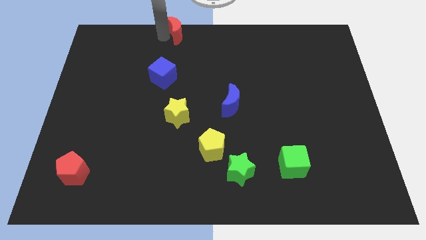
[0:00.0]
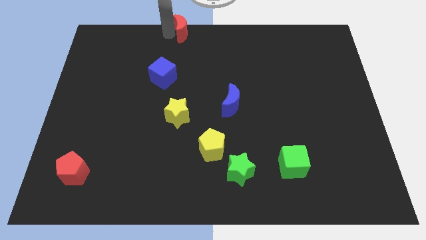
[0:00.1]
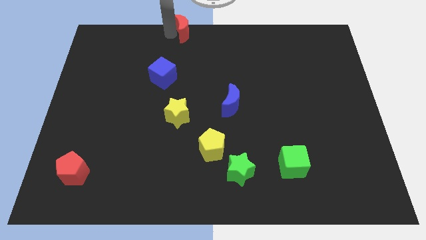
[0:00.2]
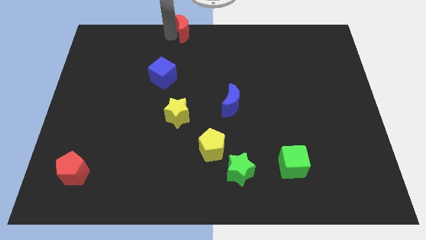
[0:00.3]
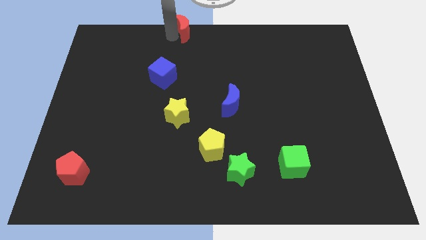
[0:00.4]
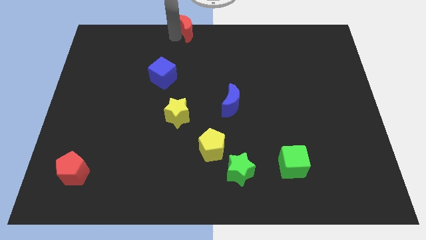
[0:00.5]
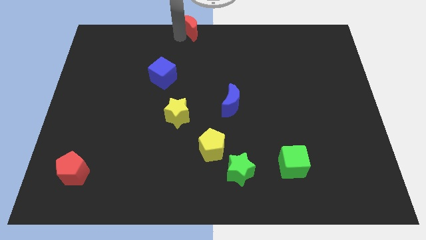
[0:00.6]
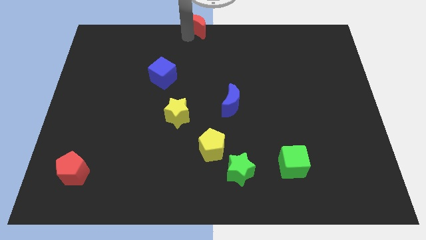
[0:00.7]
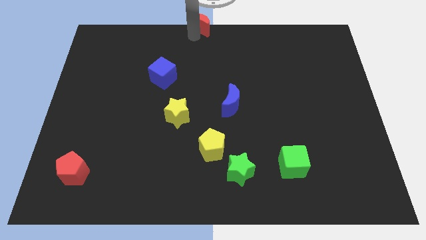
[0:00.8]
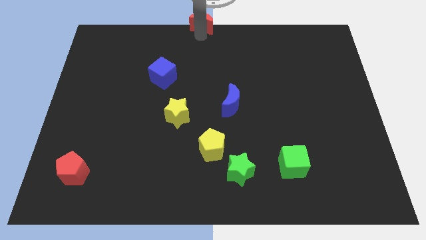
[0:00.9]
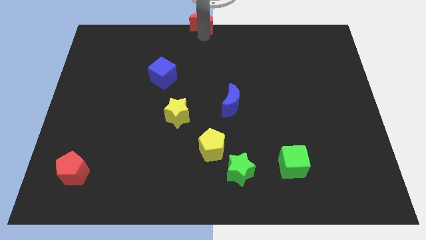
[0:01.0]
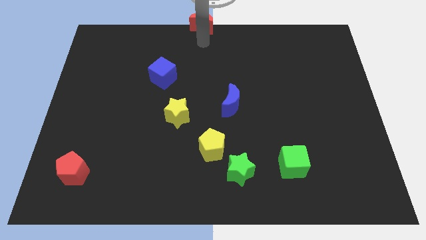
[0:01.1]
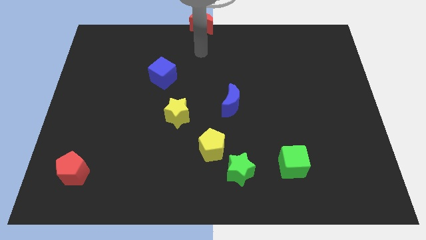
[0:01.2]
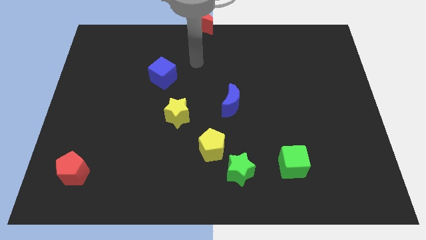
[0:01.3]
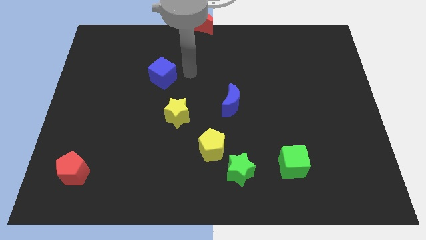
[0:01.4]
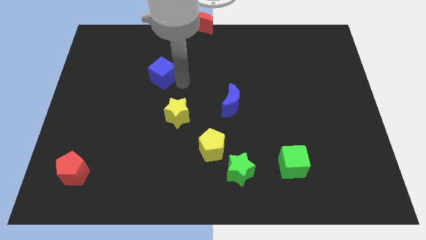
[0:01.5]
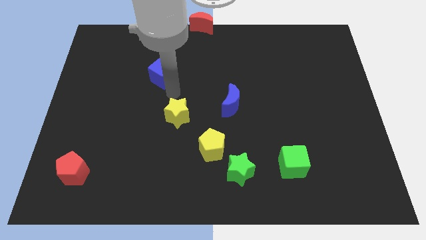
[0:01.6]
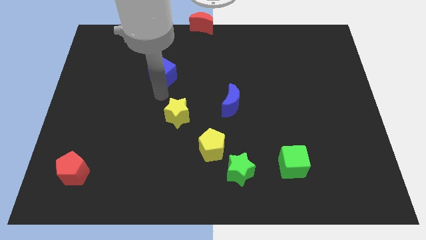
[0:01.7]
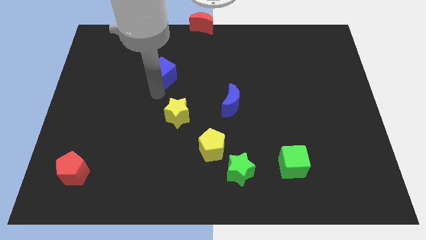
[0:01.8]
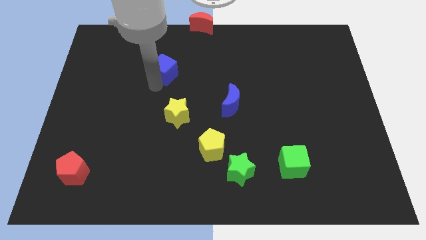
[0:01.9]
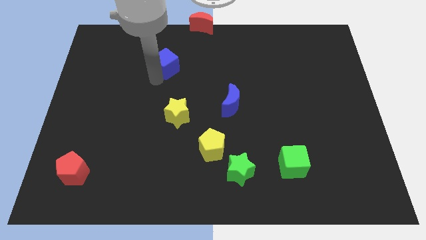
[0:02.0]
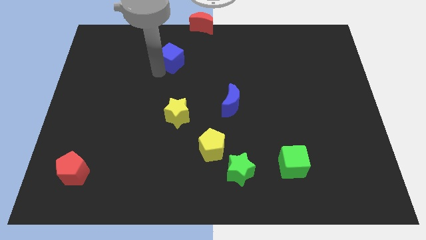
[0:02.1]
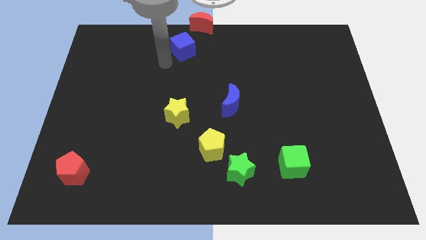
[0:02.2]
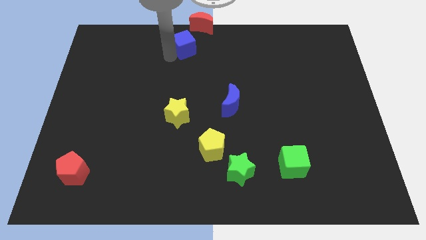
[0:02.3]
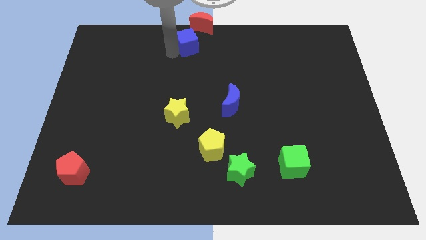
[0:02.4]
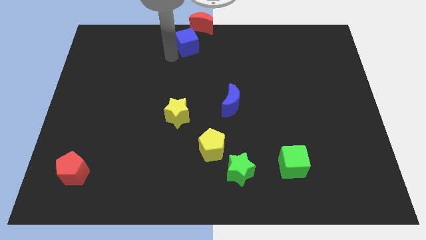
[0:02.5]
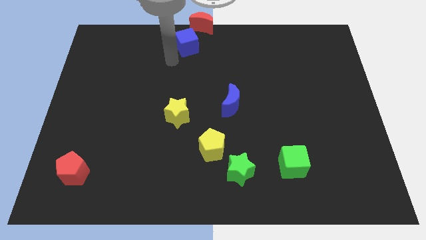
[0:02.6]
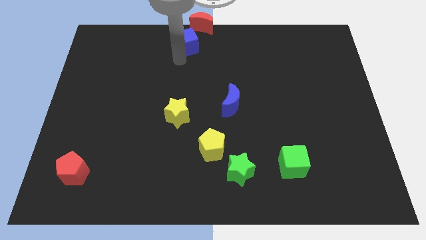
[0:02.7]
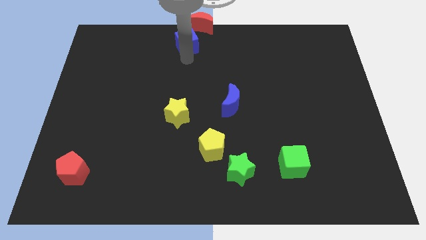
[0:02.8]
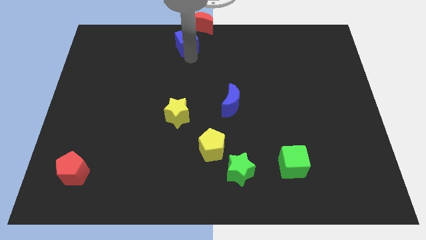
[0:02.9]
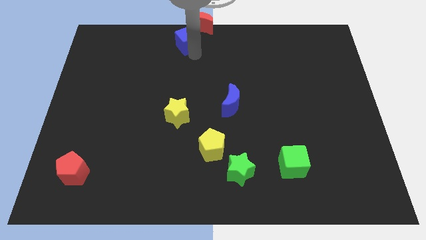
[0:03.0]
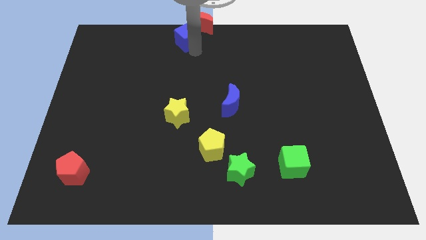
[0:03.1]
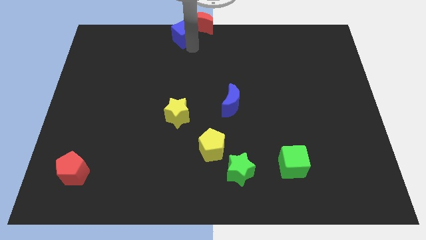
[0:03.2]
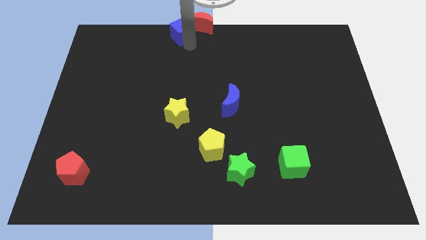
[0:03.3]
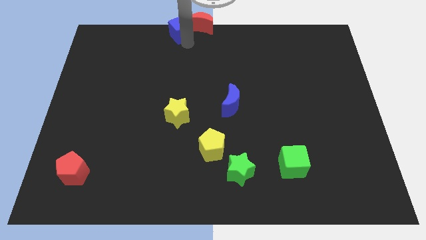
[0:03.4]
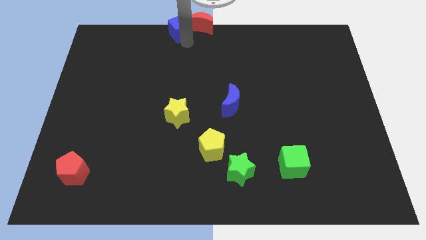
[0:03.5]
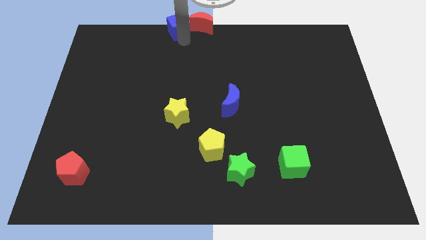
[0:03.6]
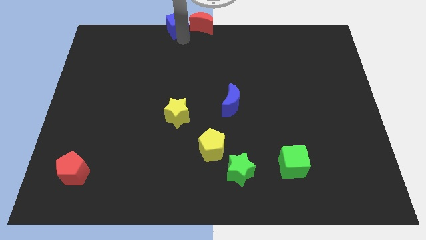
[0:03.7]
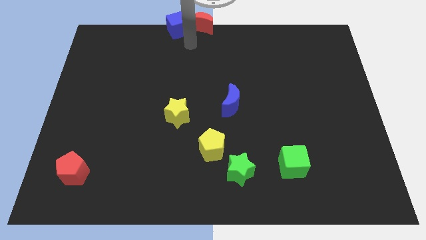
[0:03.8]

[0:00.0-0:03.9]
put the blue cube to the left of the red crescent

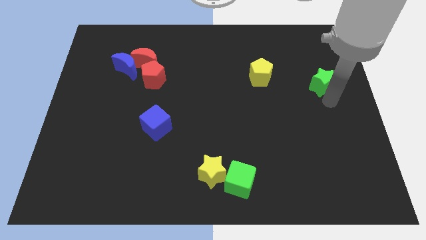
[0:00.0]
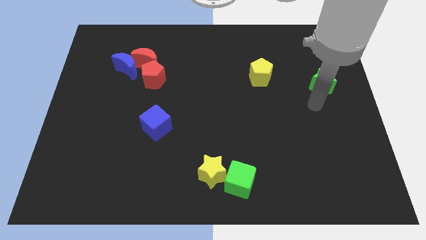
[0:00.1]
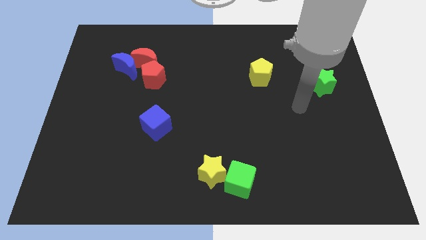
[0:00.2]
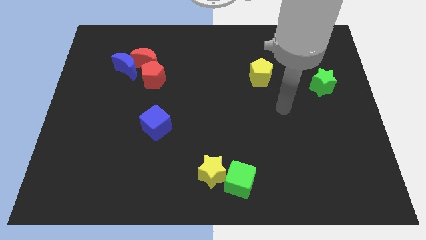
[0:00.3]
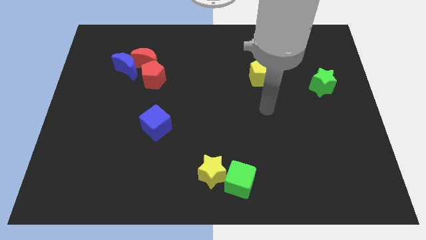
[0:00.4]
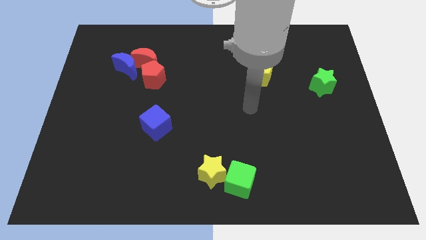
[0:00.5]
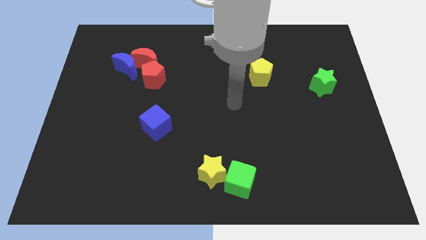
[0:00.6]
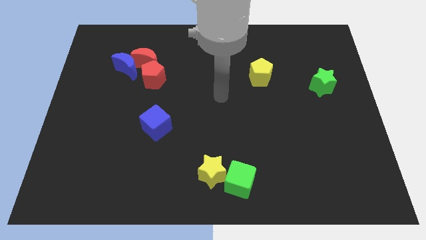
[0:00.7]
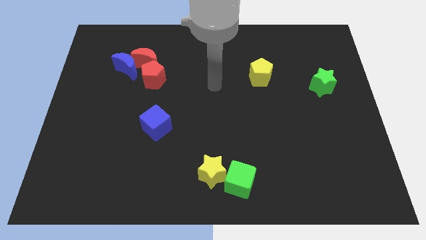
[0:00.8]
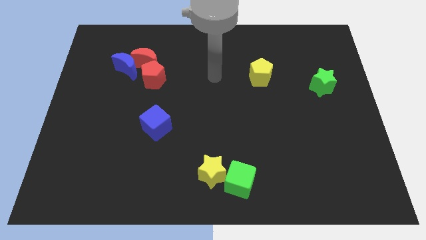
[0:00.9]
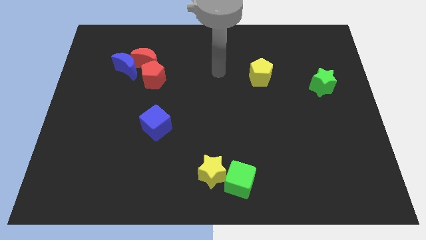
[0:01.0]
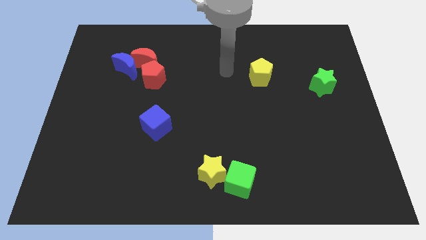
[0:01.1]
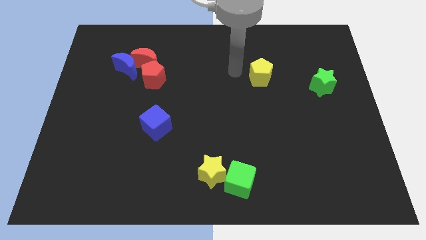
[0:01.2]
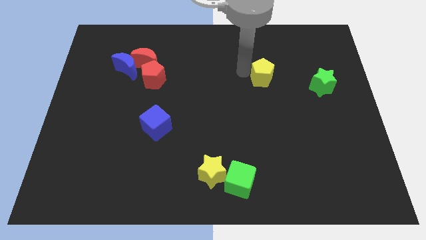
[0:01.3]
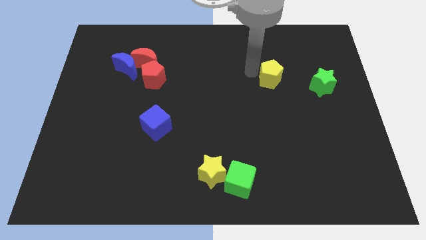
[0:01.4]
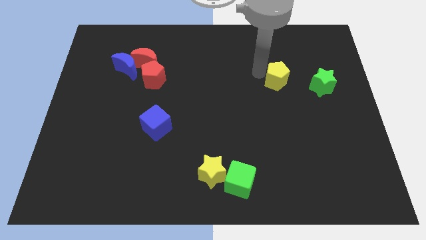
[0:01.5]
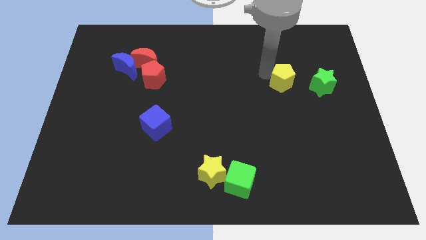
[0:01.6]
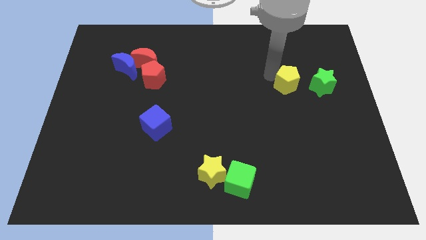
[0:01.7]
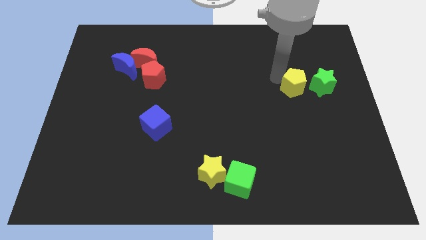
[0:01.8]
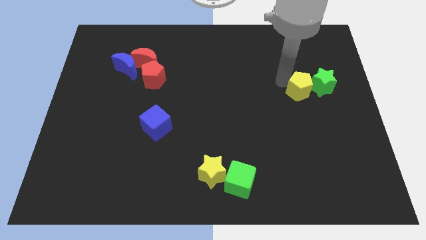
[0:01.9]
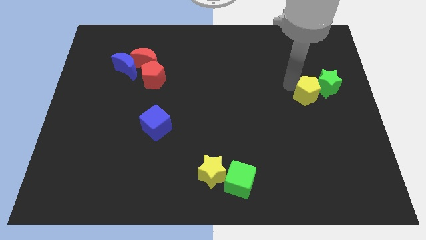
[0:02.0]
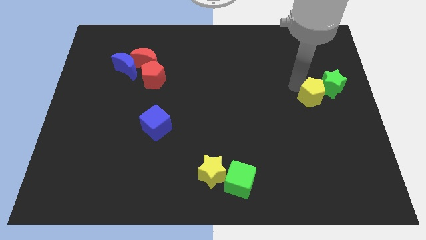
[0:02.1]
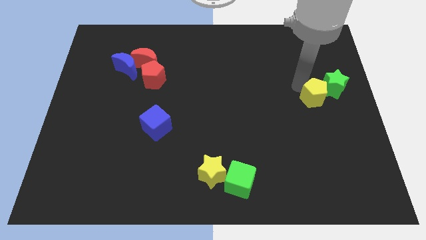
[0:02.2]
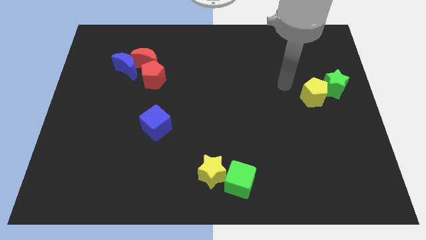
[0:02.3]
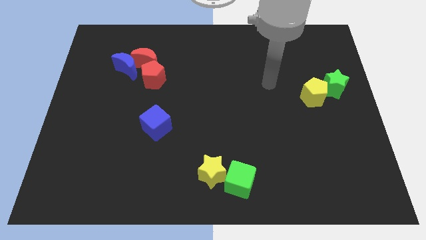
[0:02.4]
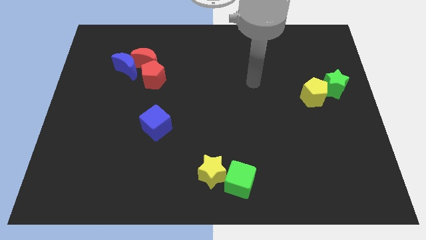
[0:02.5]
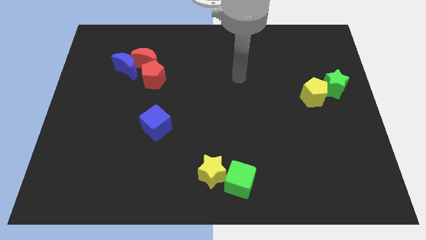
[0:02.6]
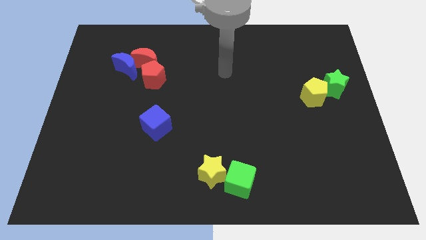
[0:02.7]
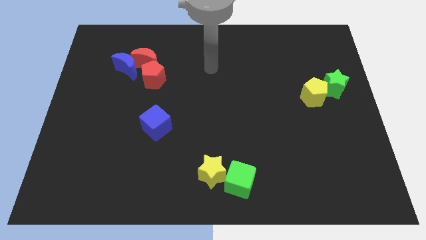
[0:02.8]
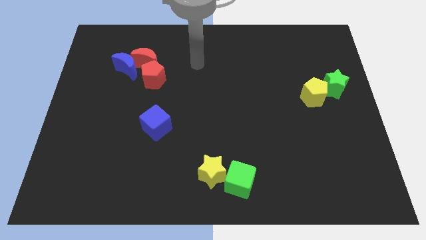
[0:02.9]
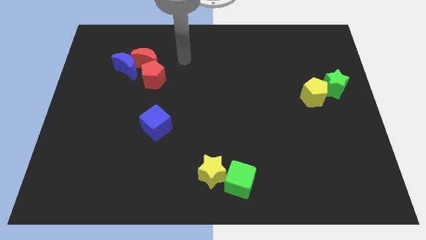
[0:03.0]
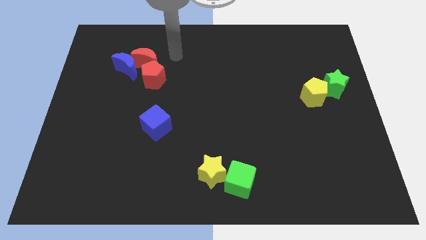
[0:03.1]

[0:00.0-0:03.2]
move the yellow pentagon into the green star

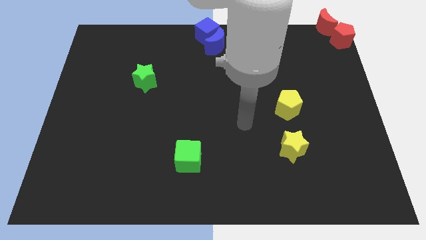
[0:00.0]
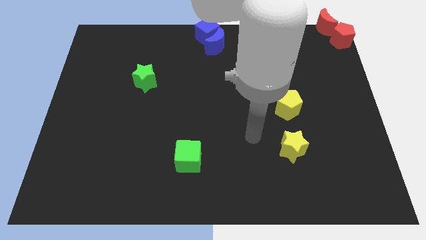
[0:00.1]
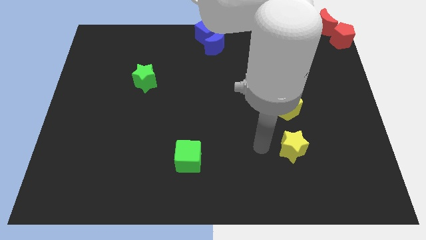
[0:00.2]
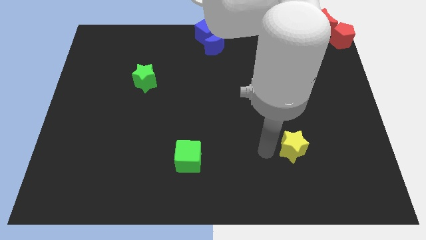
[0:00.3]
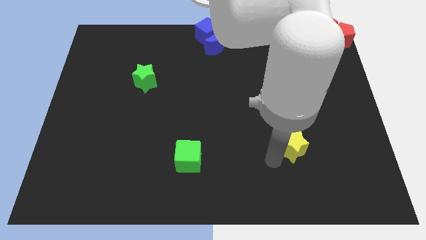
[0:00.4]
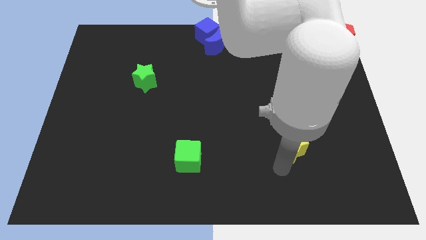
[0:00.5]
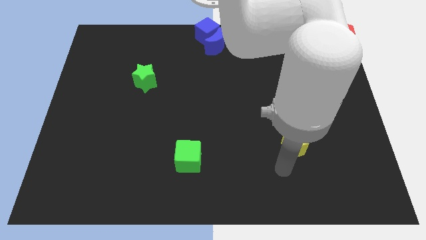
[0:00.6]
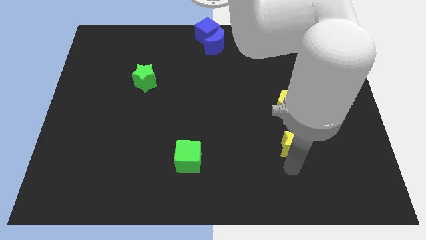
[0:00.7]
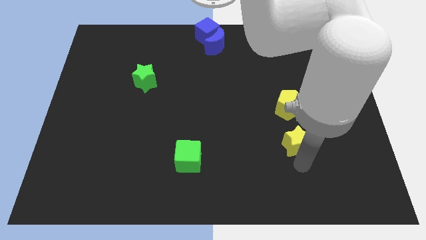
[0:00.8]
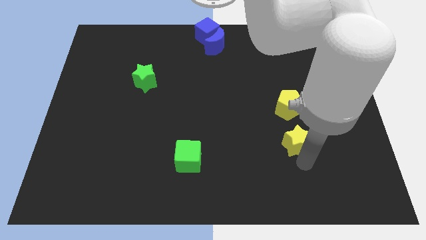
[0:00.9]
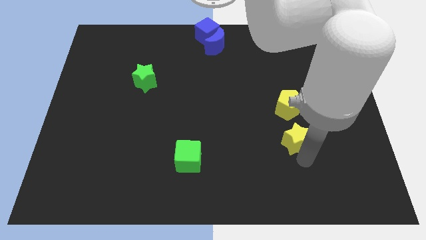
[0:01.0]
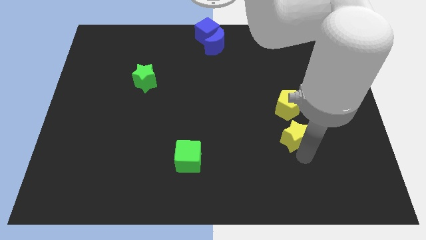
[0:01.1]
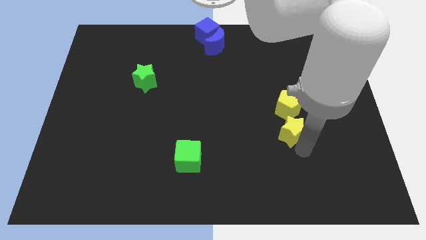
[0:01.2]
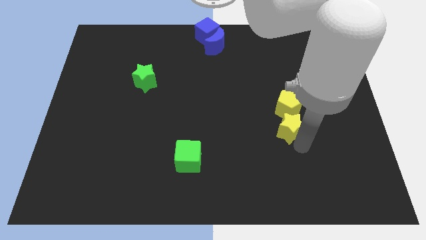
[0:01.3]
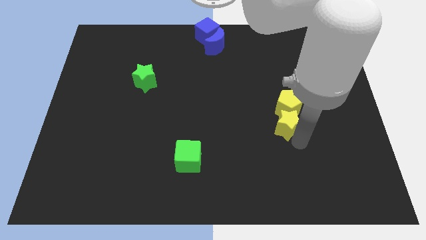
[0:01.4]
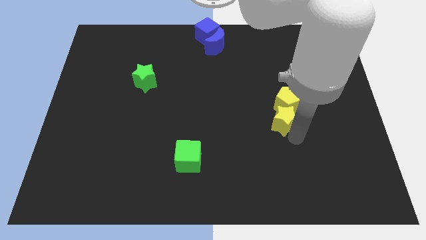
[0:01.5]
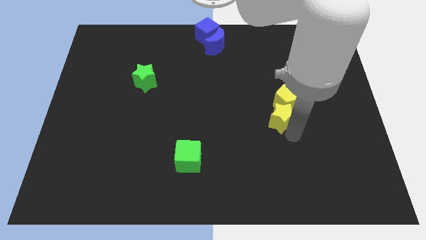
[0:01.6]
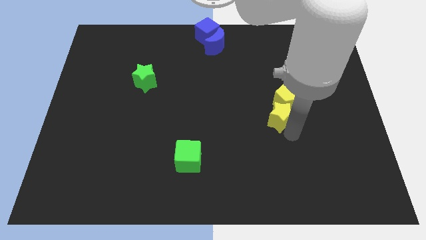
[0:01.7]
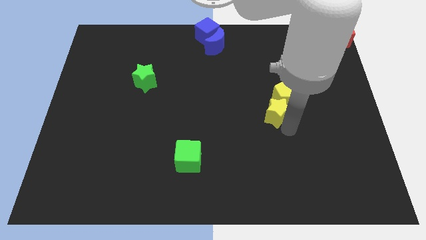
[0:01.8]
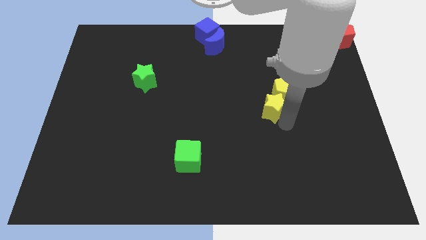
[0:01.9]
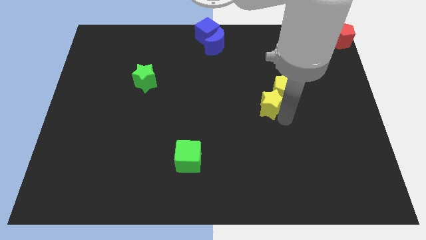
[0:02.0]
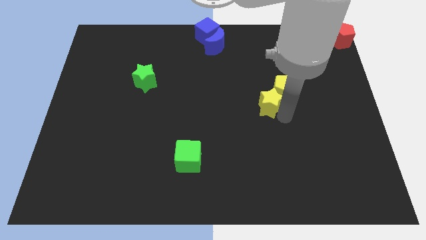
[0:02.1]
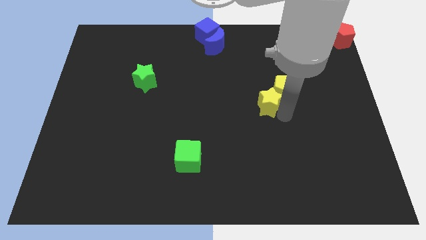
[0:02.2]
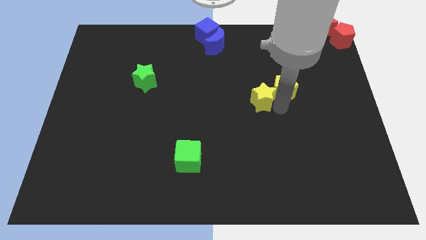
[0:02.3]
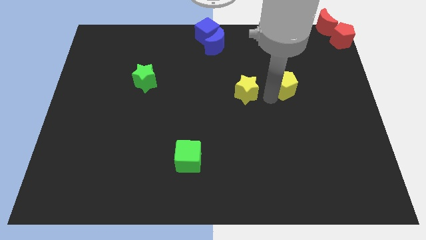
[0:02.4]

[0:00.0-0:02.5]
push the yellow blocks slightly to the top
